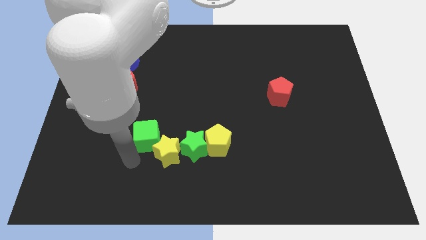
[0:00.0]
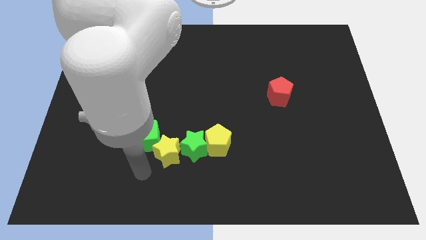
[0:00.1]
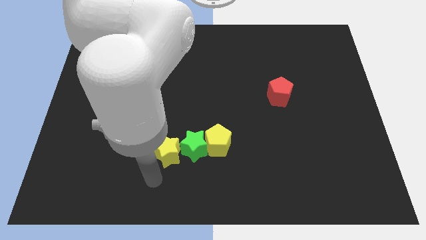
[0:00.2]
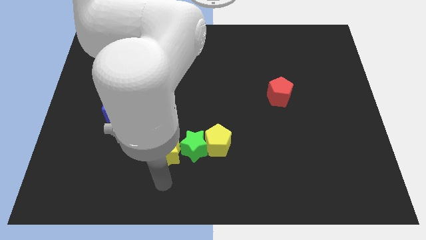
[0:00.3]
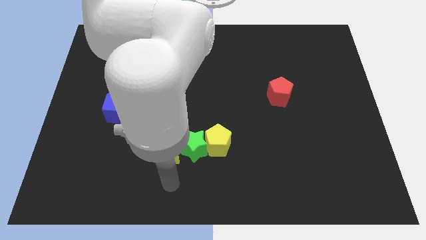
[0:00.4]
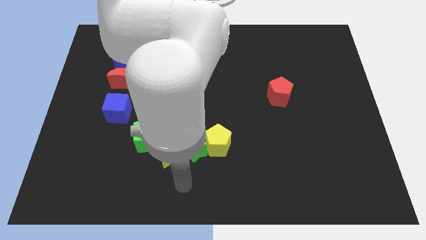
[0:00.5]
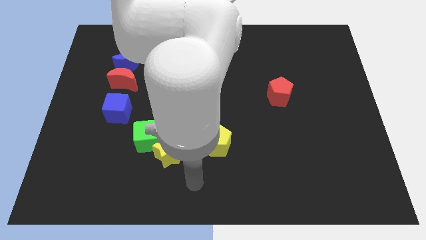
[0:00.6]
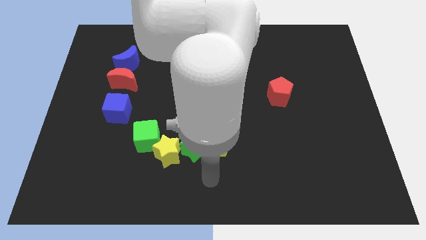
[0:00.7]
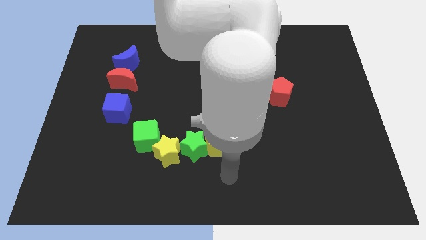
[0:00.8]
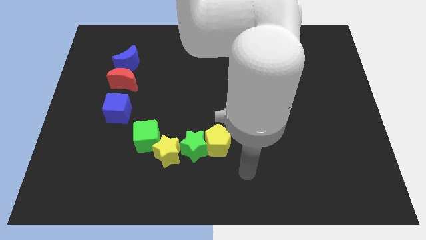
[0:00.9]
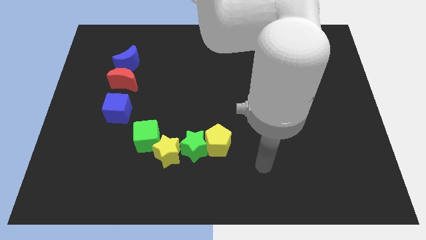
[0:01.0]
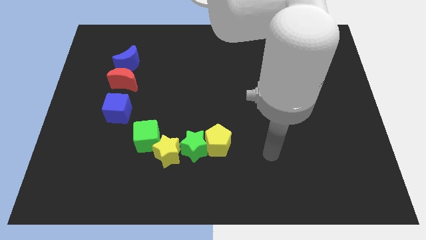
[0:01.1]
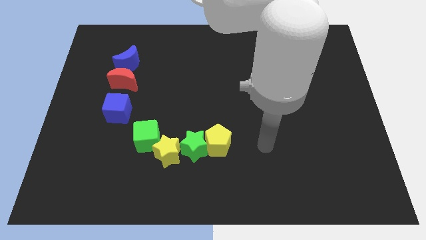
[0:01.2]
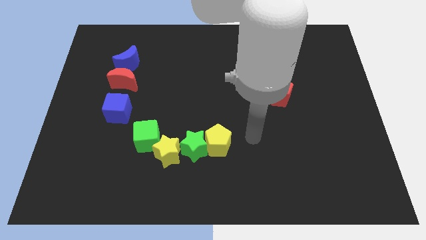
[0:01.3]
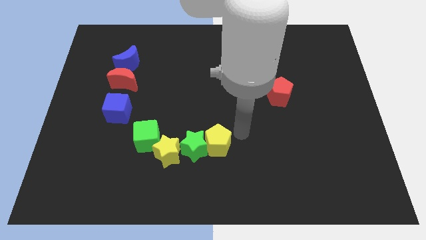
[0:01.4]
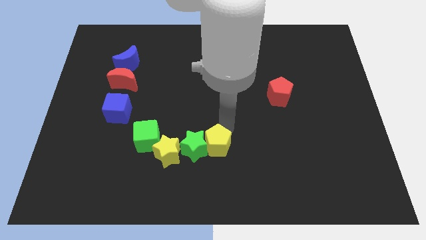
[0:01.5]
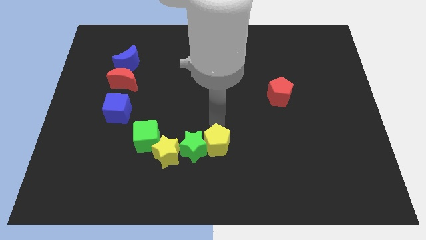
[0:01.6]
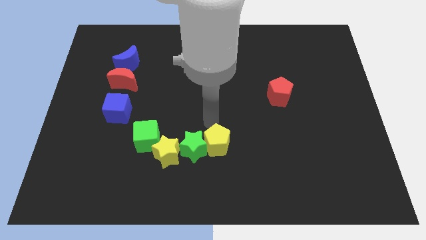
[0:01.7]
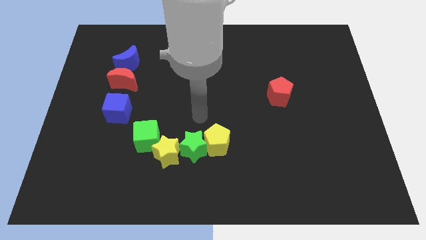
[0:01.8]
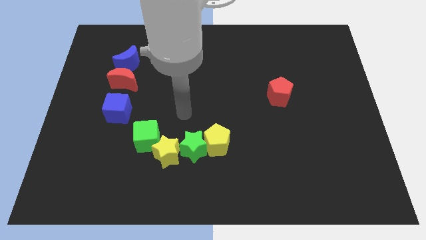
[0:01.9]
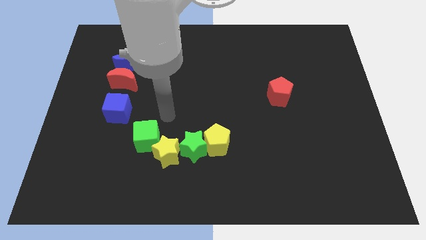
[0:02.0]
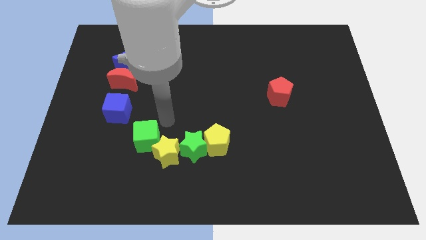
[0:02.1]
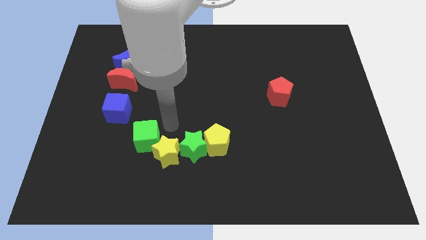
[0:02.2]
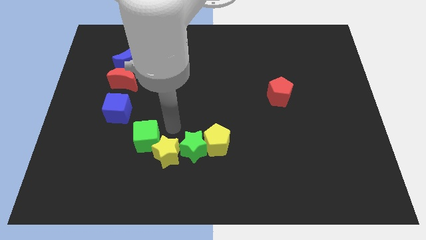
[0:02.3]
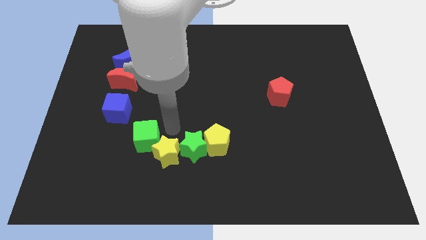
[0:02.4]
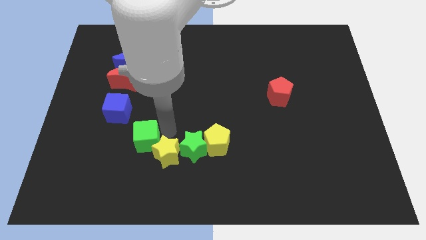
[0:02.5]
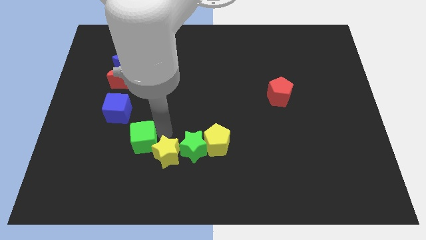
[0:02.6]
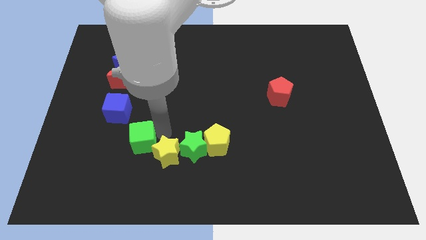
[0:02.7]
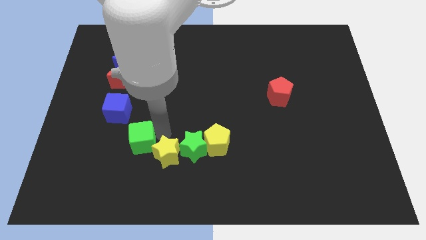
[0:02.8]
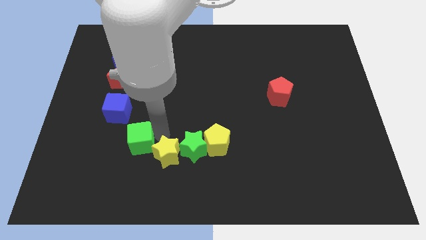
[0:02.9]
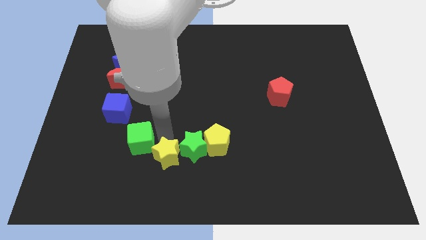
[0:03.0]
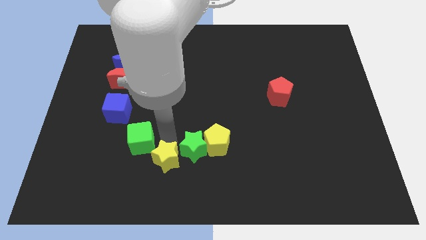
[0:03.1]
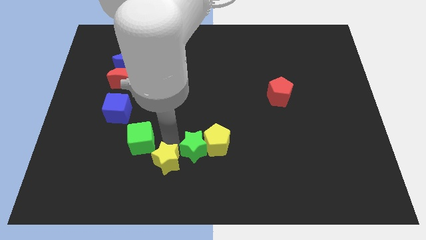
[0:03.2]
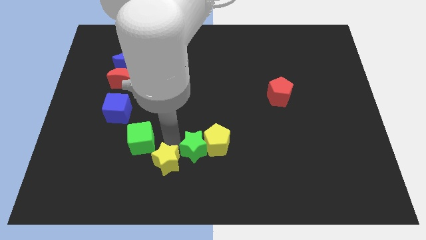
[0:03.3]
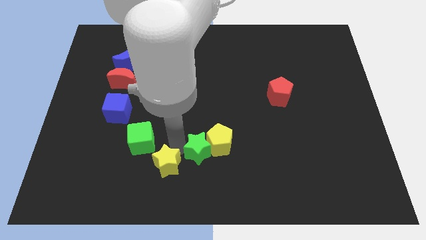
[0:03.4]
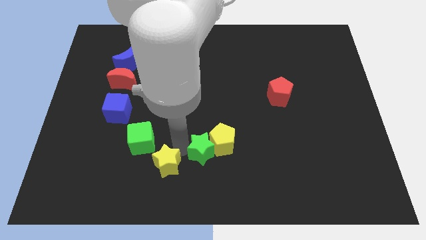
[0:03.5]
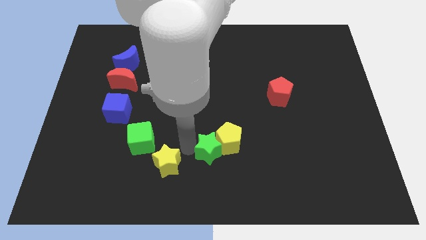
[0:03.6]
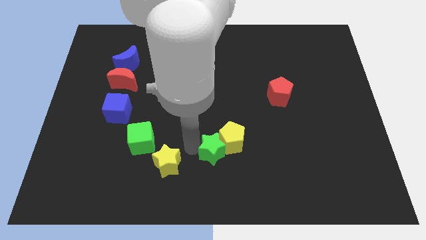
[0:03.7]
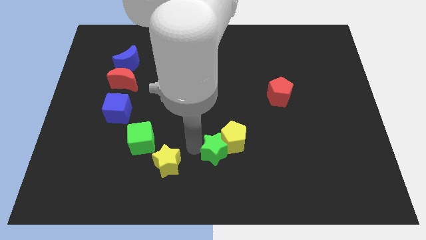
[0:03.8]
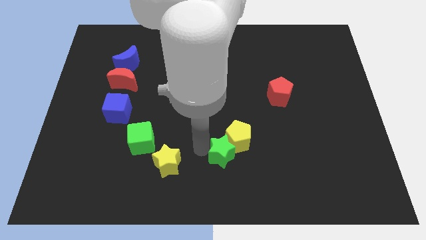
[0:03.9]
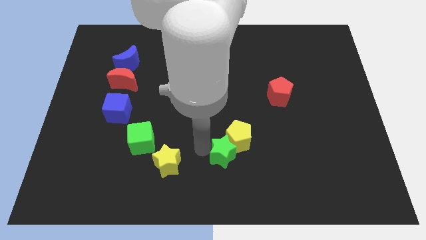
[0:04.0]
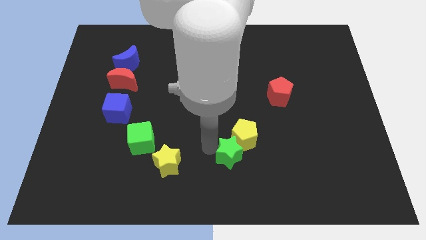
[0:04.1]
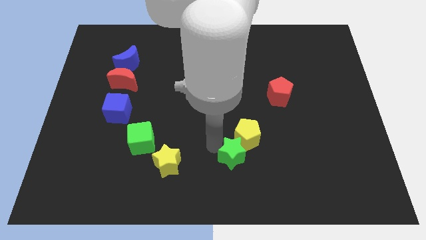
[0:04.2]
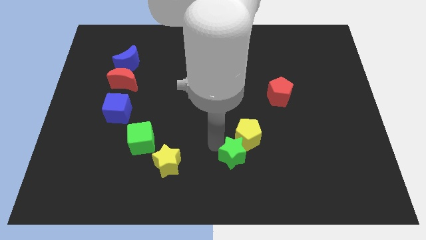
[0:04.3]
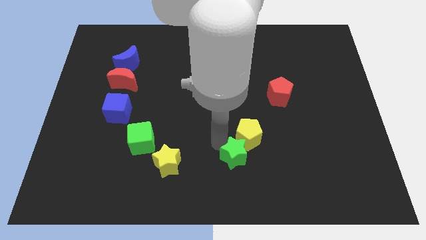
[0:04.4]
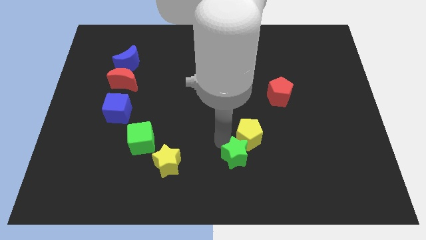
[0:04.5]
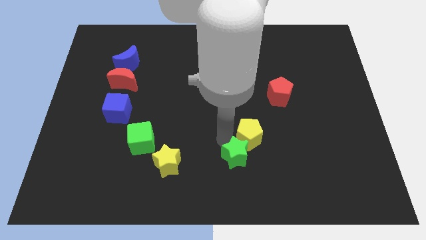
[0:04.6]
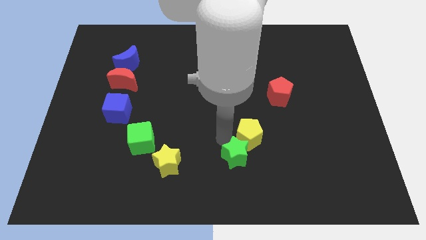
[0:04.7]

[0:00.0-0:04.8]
push green star and yellow pentagon towards the bottom right side of the board

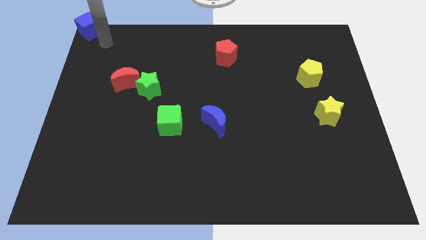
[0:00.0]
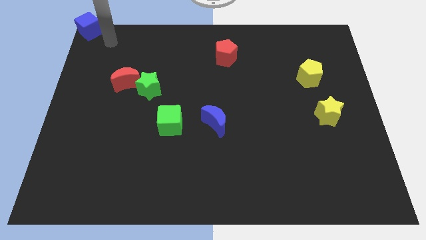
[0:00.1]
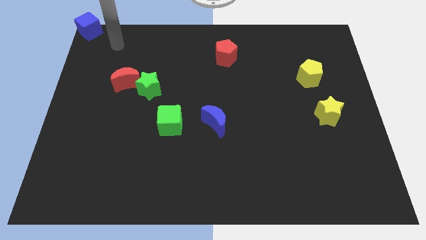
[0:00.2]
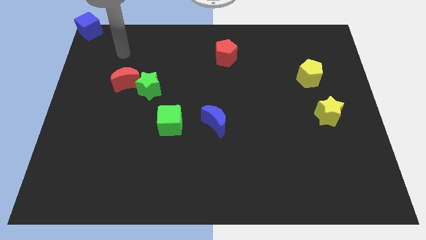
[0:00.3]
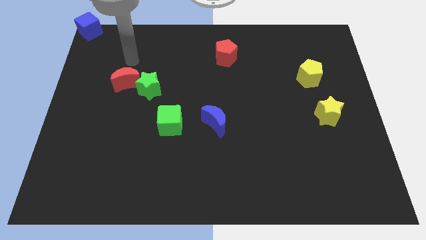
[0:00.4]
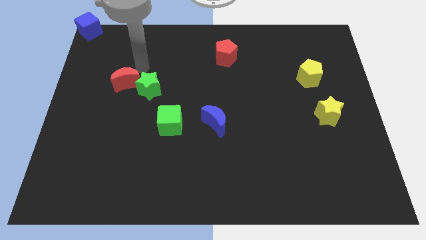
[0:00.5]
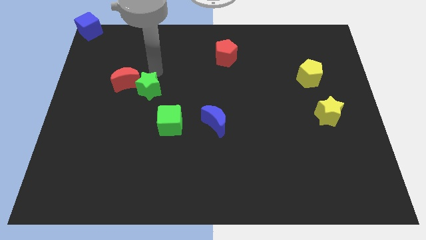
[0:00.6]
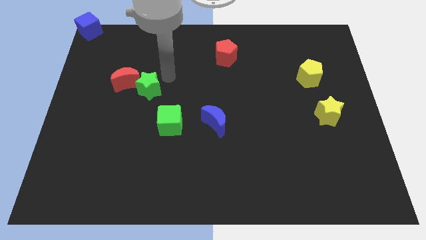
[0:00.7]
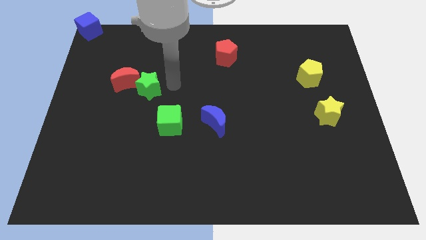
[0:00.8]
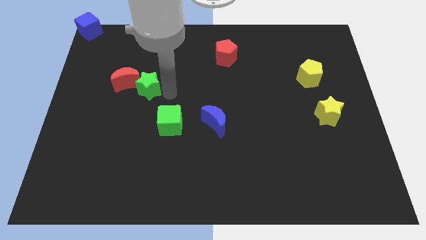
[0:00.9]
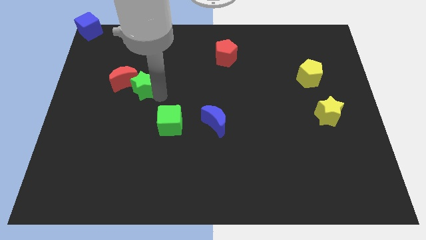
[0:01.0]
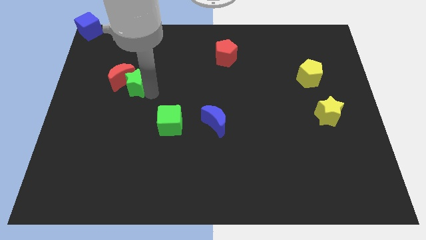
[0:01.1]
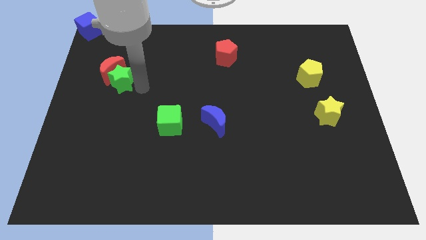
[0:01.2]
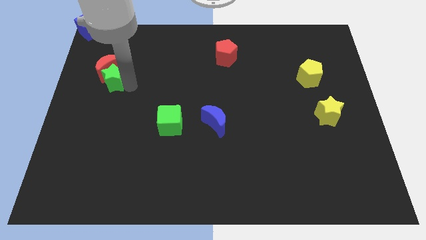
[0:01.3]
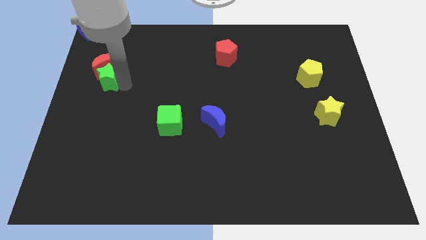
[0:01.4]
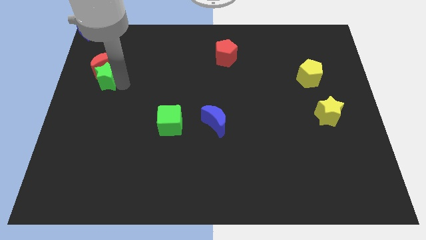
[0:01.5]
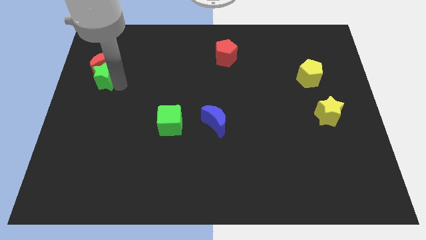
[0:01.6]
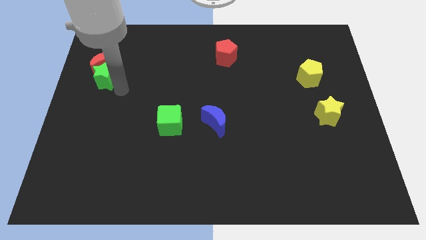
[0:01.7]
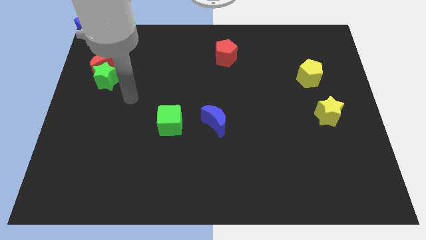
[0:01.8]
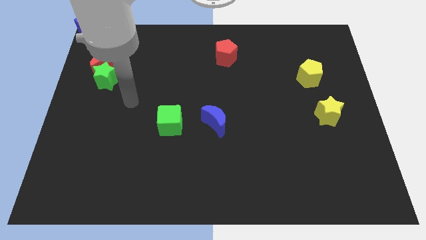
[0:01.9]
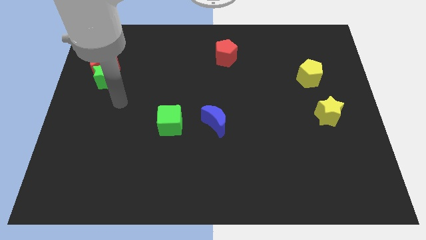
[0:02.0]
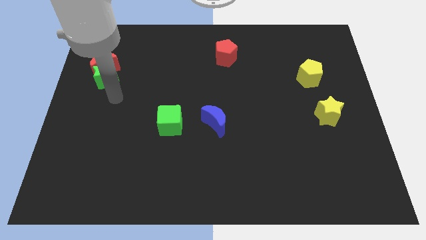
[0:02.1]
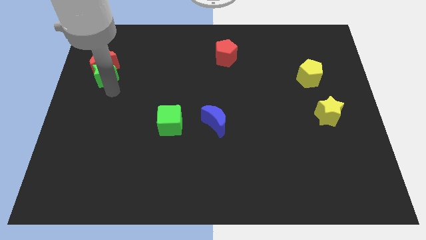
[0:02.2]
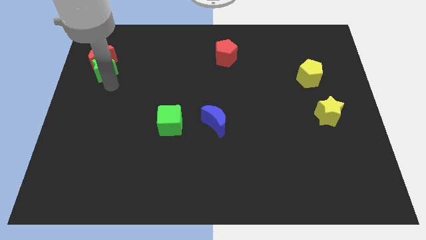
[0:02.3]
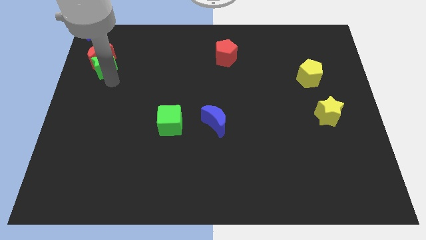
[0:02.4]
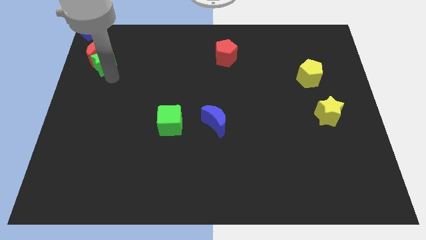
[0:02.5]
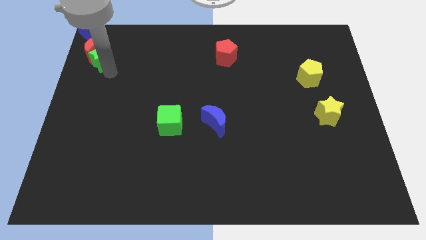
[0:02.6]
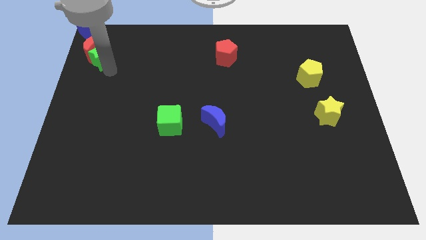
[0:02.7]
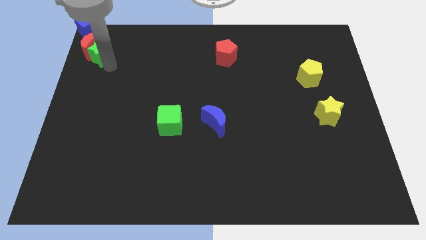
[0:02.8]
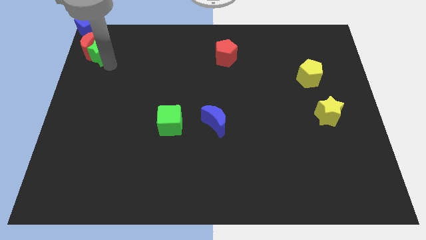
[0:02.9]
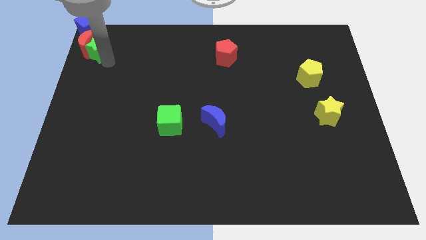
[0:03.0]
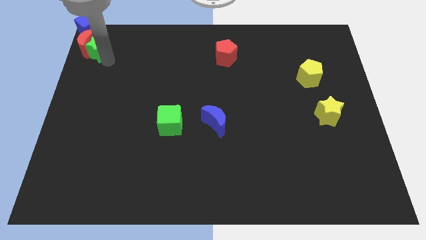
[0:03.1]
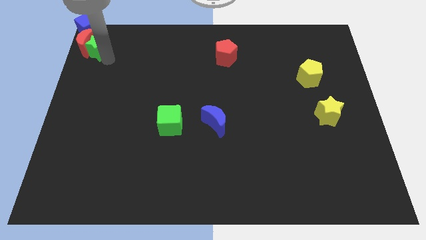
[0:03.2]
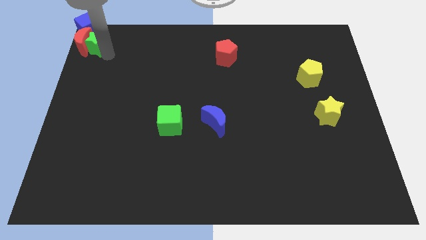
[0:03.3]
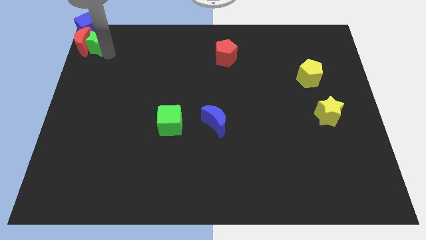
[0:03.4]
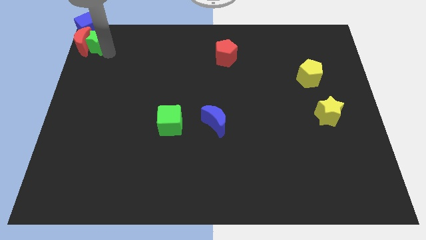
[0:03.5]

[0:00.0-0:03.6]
push the red moon and green star into the bottom side of the blue cube

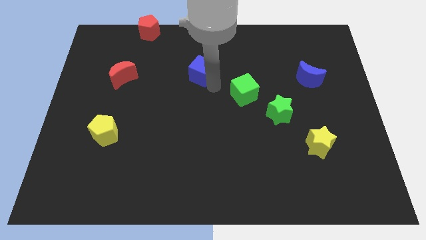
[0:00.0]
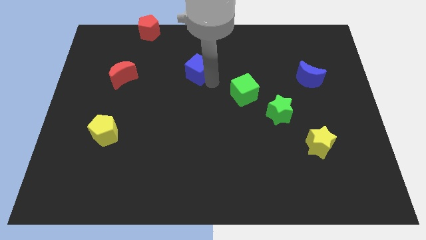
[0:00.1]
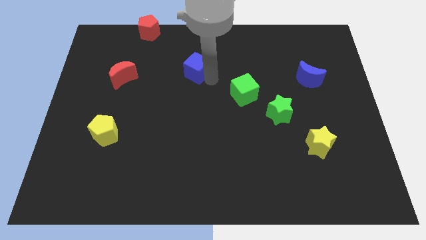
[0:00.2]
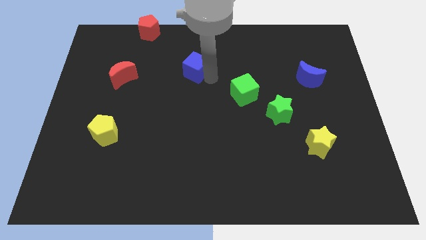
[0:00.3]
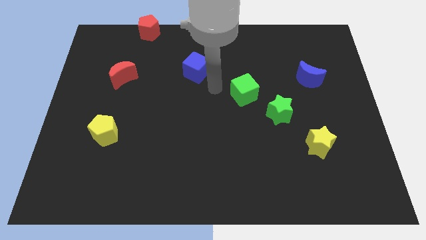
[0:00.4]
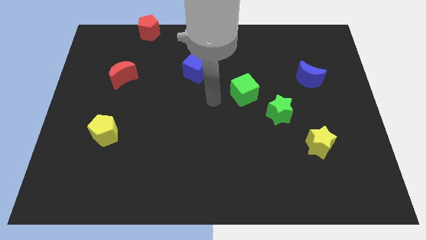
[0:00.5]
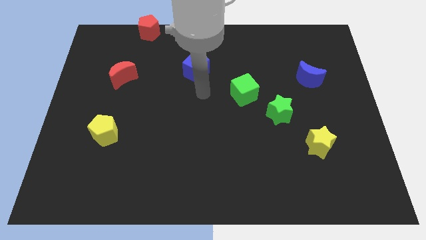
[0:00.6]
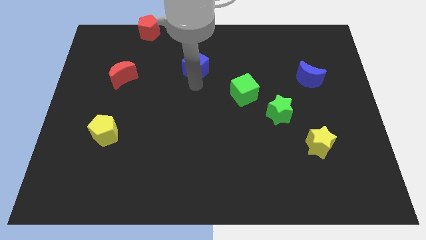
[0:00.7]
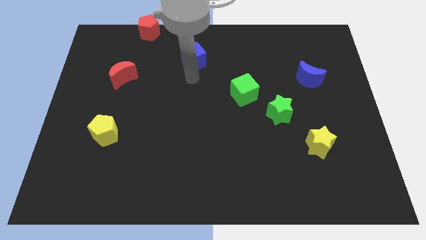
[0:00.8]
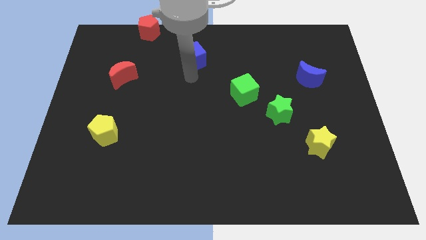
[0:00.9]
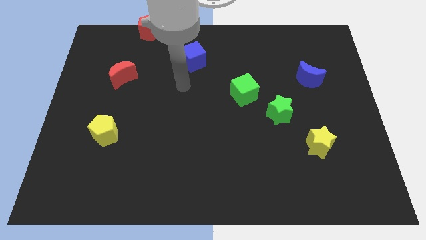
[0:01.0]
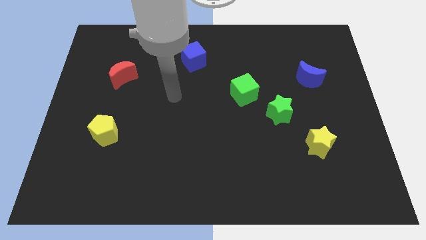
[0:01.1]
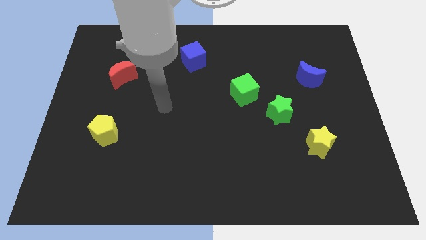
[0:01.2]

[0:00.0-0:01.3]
move blue cube slightly towards top
